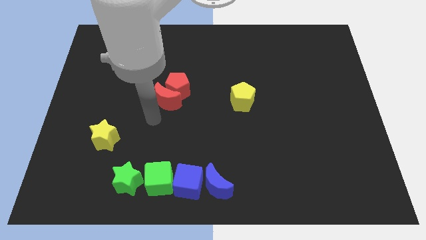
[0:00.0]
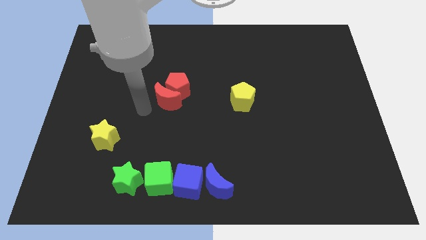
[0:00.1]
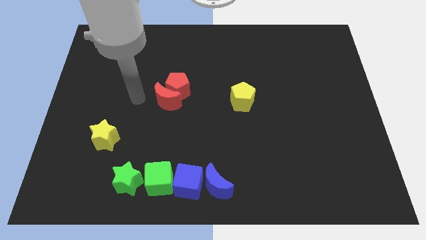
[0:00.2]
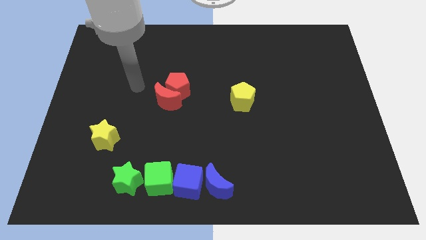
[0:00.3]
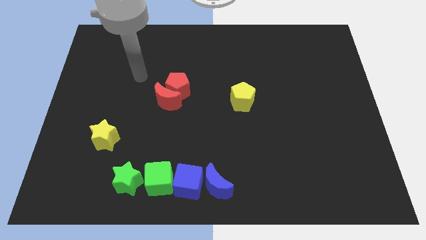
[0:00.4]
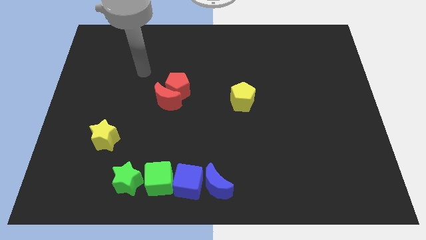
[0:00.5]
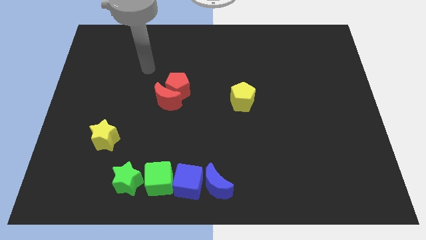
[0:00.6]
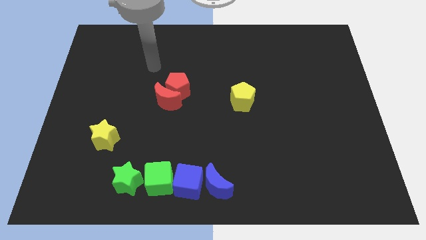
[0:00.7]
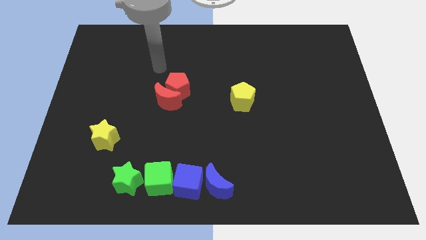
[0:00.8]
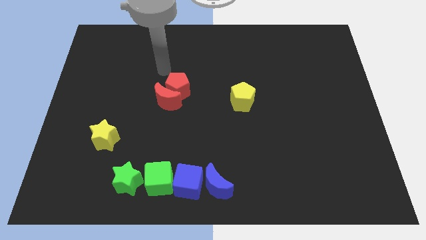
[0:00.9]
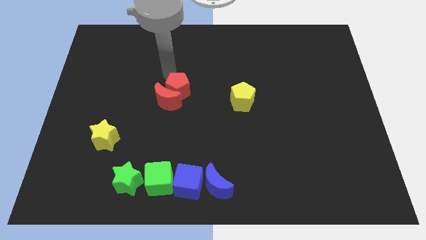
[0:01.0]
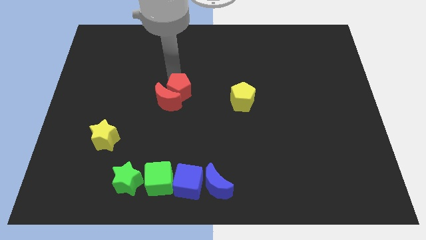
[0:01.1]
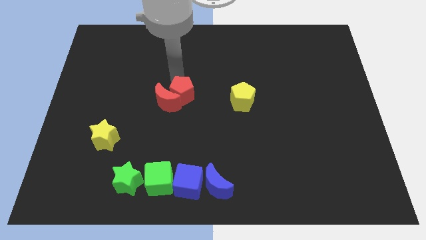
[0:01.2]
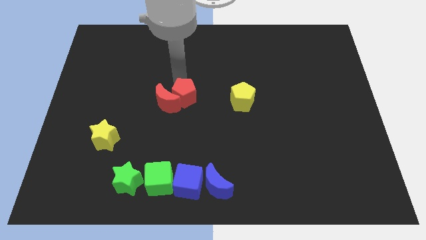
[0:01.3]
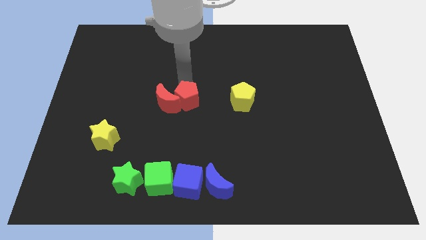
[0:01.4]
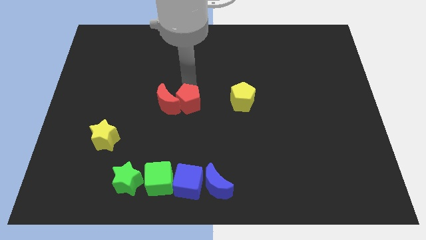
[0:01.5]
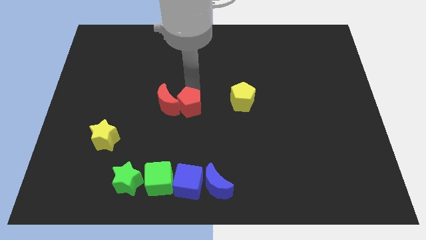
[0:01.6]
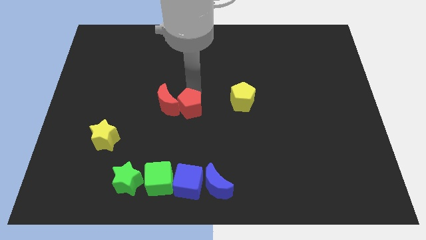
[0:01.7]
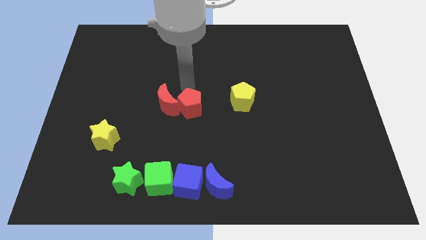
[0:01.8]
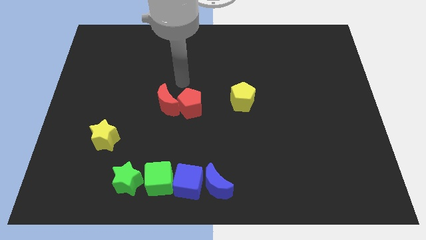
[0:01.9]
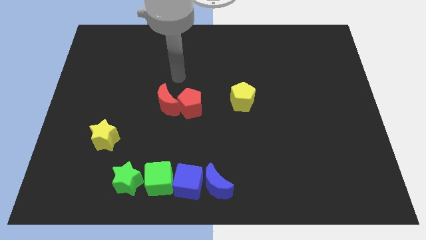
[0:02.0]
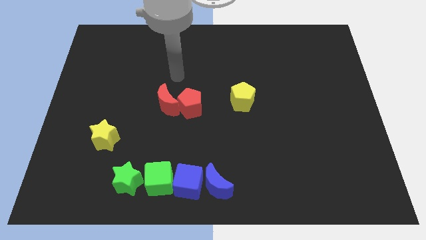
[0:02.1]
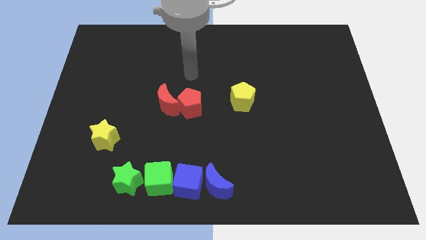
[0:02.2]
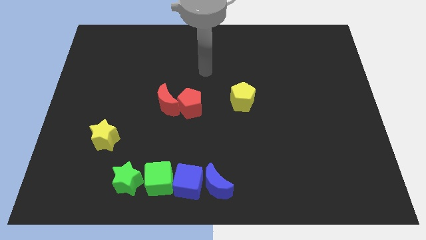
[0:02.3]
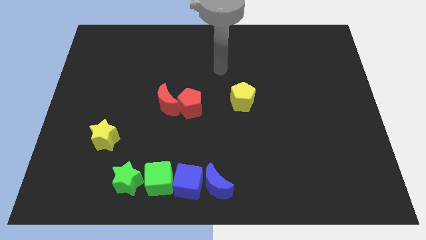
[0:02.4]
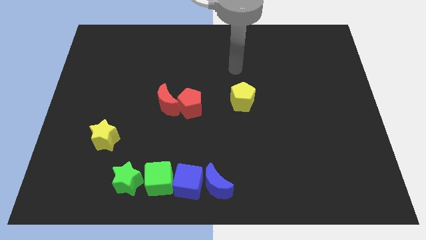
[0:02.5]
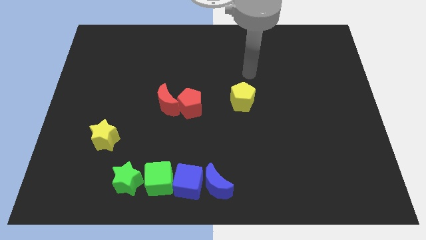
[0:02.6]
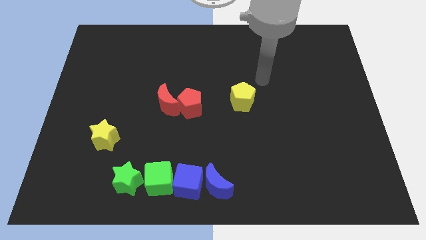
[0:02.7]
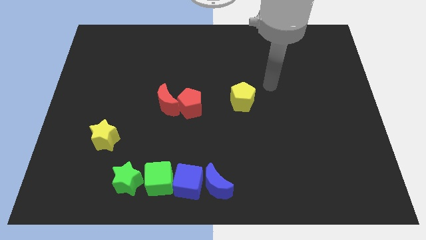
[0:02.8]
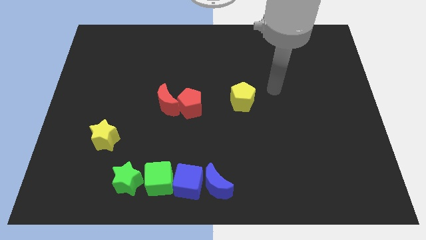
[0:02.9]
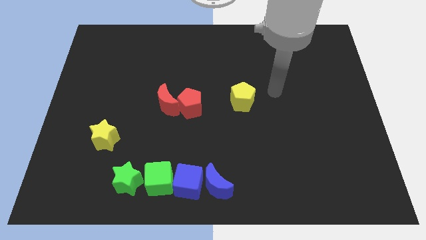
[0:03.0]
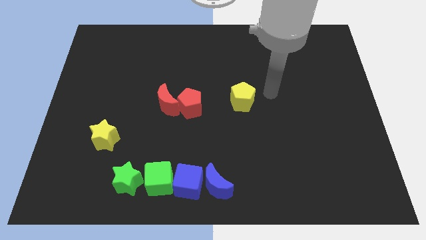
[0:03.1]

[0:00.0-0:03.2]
move the red pentagon vertically on the top side of the blue cube

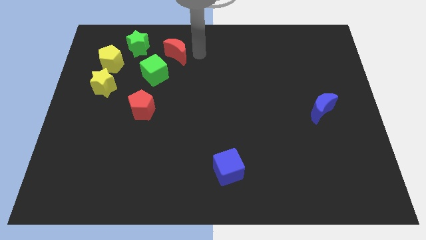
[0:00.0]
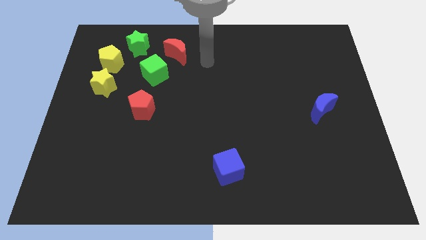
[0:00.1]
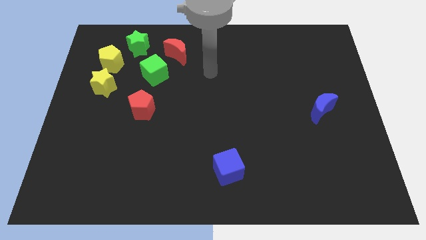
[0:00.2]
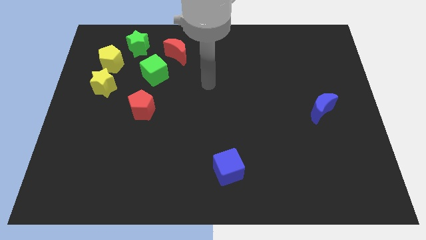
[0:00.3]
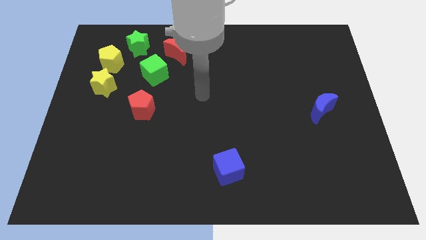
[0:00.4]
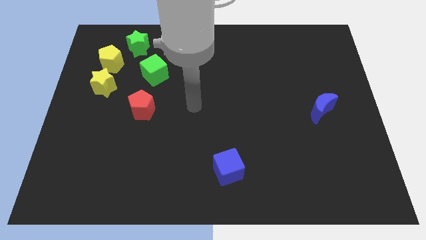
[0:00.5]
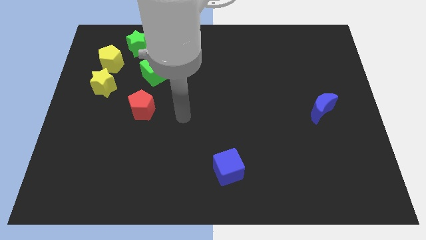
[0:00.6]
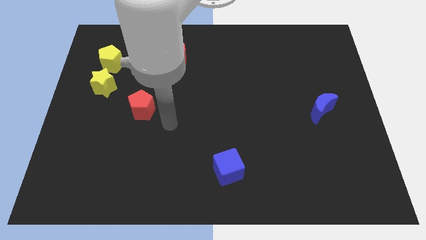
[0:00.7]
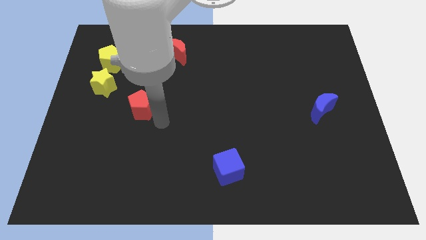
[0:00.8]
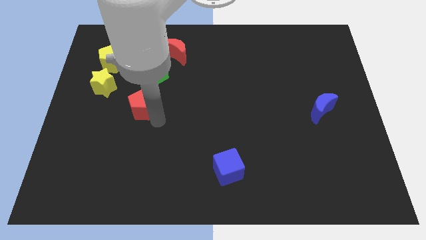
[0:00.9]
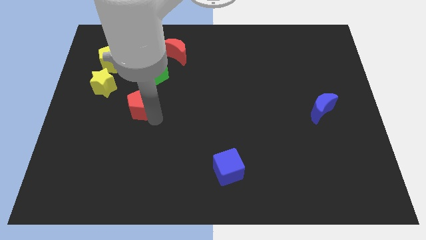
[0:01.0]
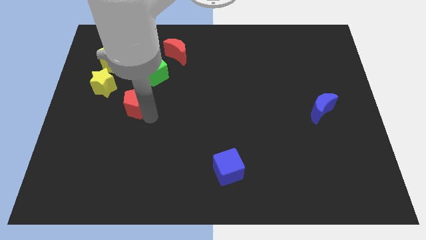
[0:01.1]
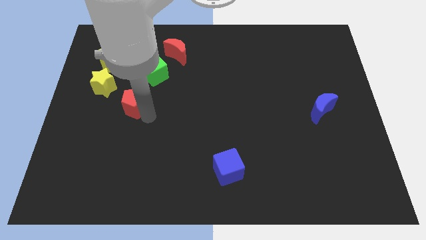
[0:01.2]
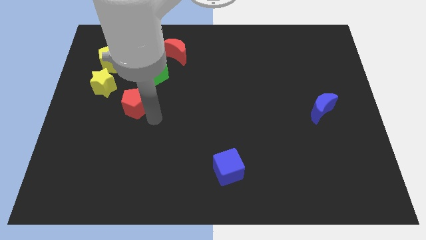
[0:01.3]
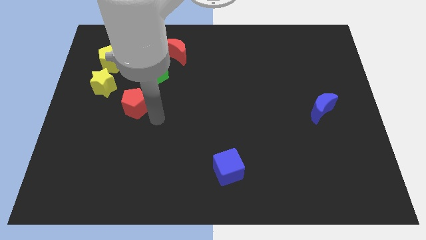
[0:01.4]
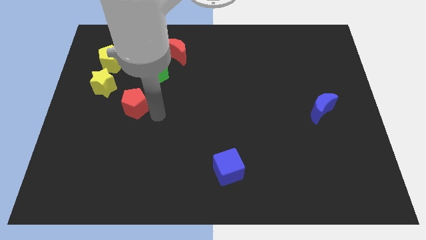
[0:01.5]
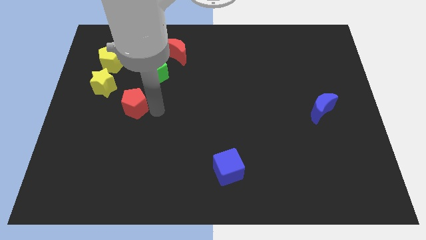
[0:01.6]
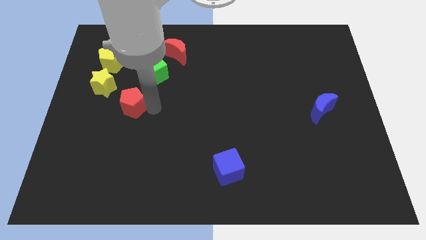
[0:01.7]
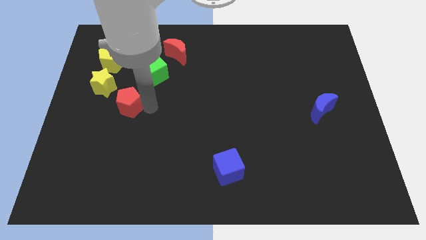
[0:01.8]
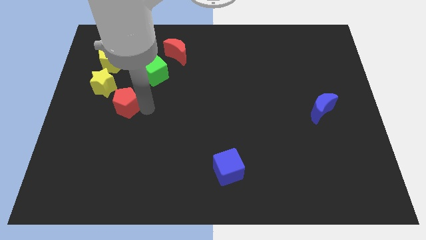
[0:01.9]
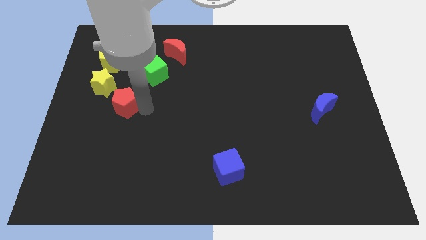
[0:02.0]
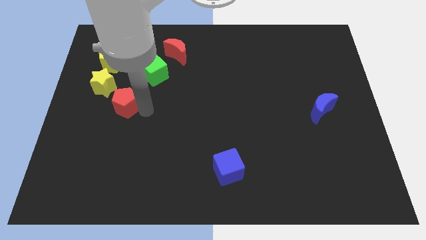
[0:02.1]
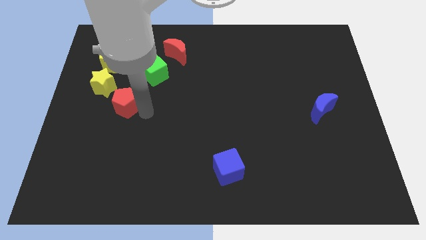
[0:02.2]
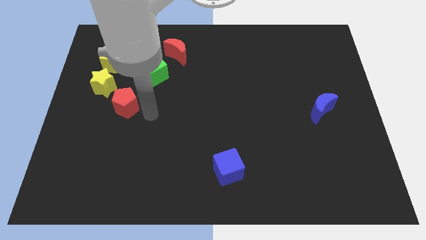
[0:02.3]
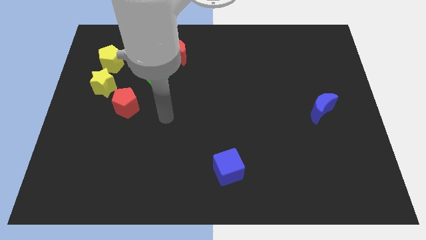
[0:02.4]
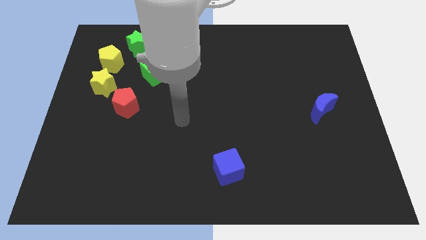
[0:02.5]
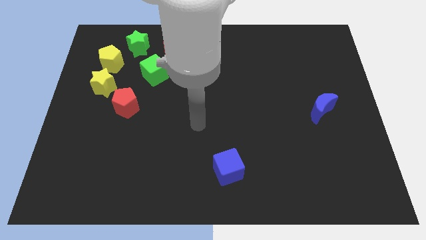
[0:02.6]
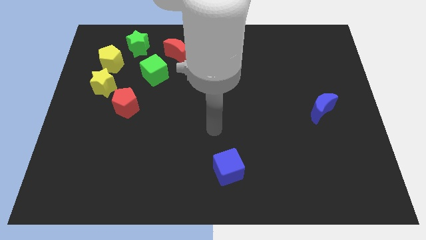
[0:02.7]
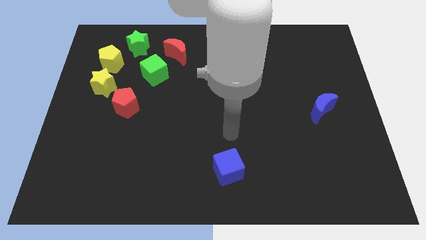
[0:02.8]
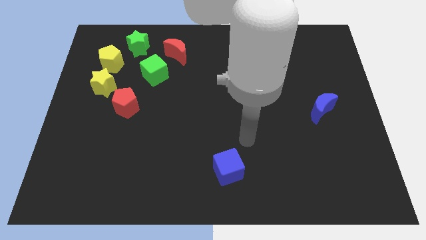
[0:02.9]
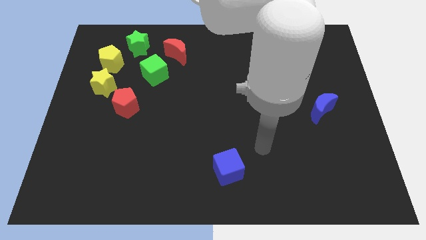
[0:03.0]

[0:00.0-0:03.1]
move the red pentagon below the yellow star

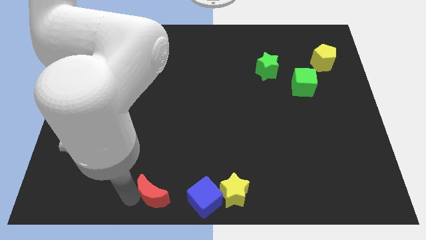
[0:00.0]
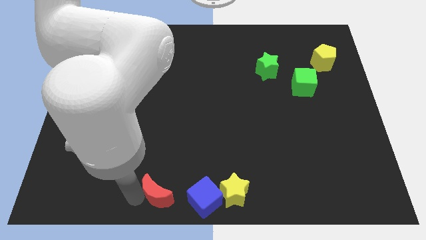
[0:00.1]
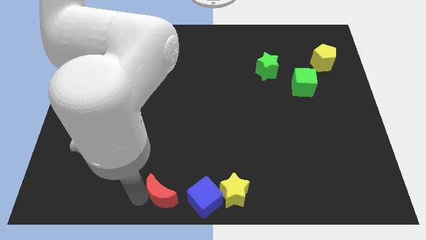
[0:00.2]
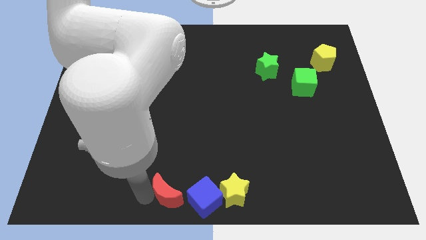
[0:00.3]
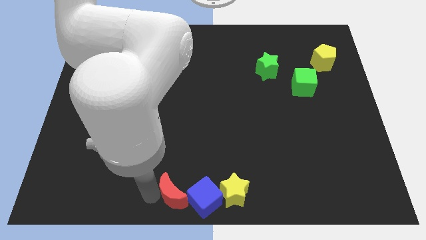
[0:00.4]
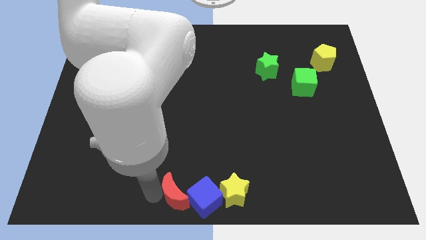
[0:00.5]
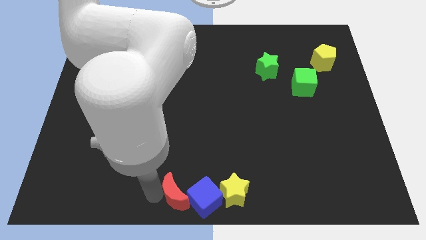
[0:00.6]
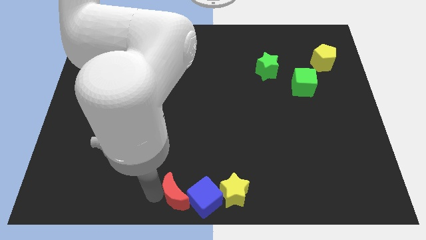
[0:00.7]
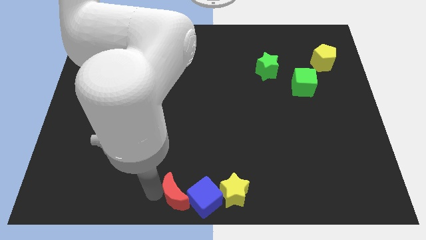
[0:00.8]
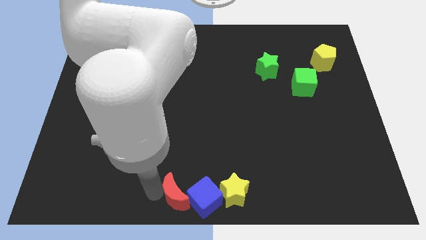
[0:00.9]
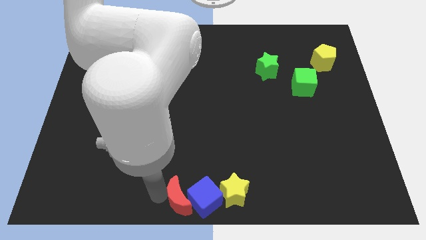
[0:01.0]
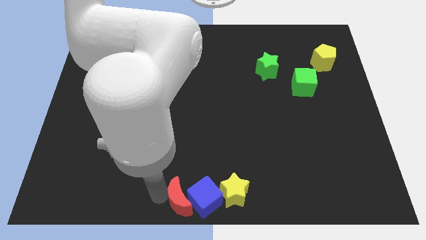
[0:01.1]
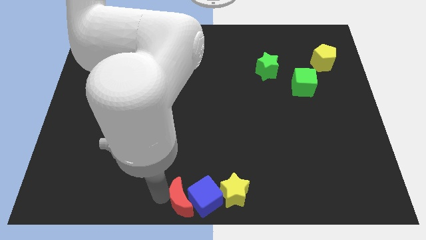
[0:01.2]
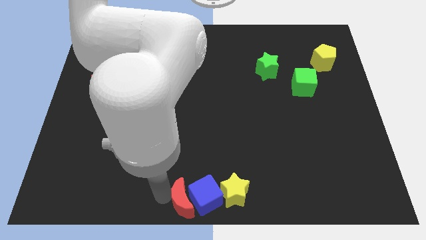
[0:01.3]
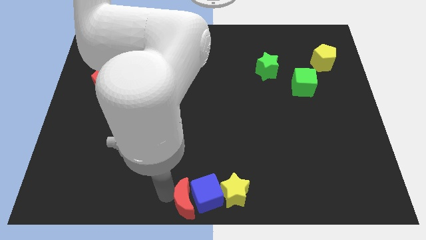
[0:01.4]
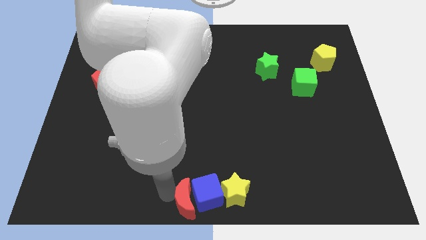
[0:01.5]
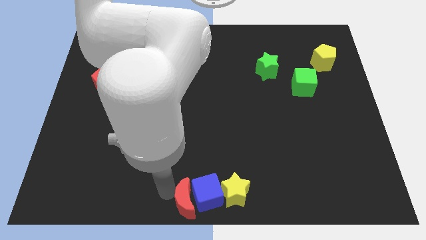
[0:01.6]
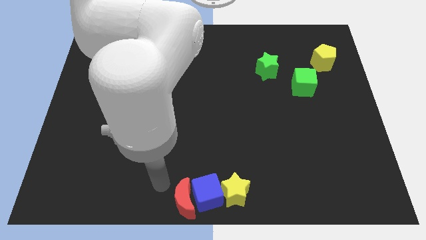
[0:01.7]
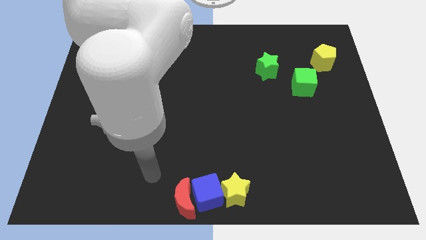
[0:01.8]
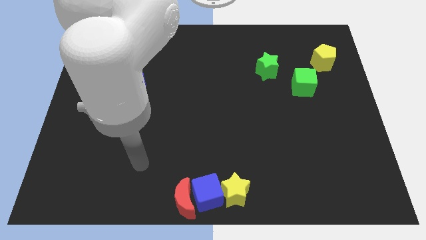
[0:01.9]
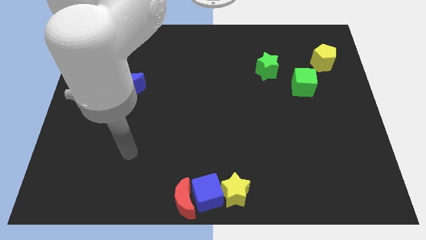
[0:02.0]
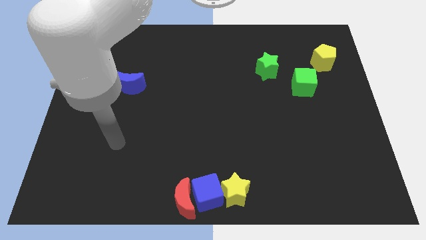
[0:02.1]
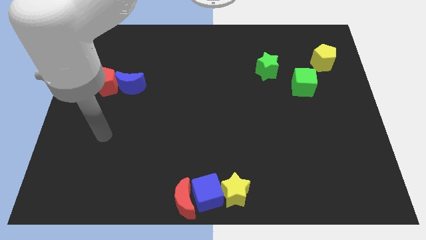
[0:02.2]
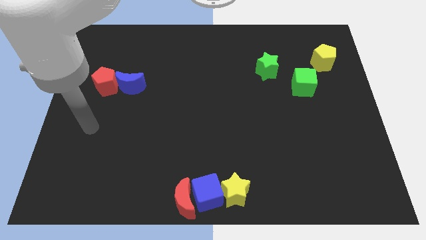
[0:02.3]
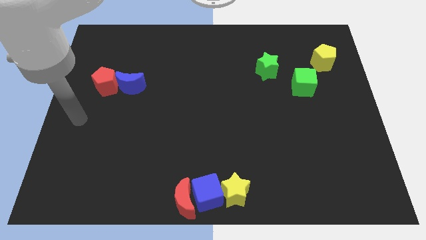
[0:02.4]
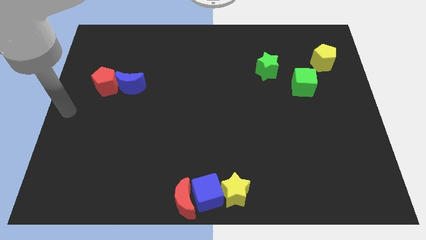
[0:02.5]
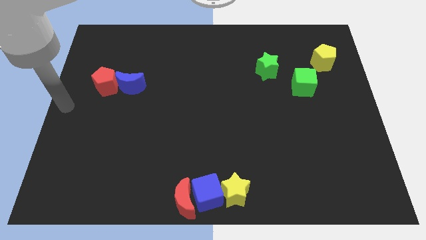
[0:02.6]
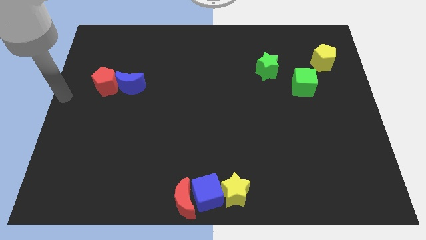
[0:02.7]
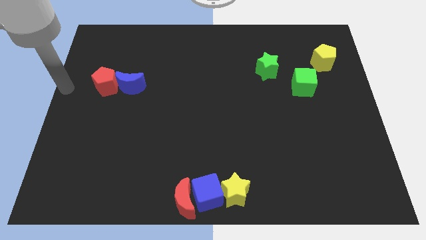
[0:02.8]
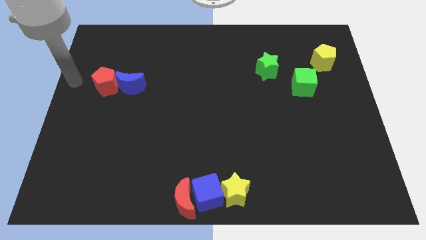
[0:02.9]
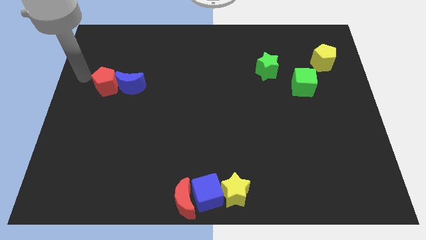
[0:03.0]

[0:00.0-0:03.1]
slide the red moon into the blue cube
